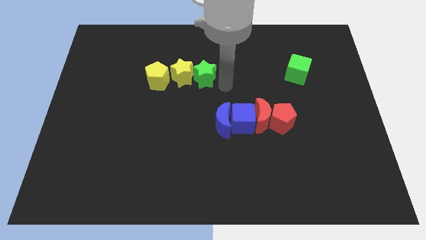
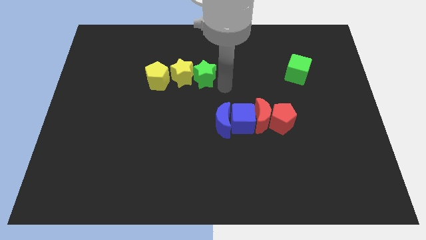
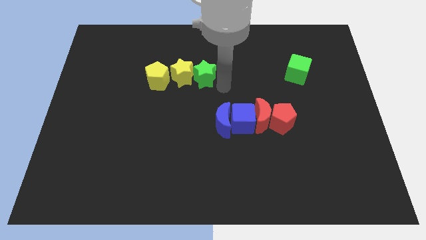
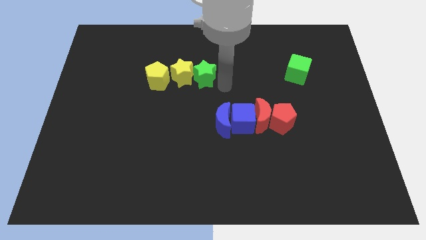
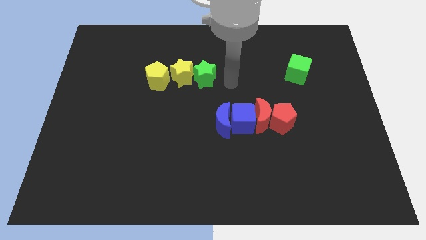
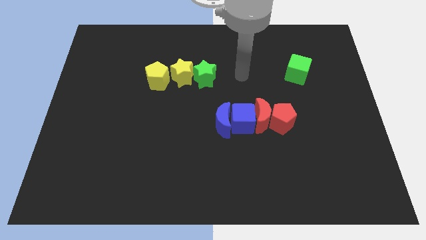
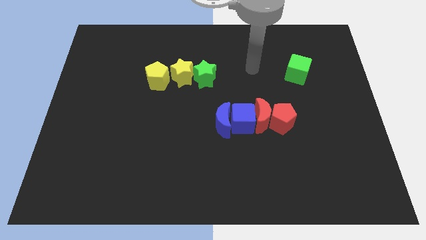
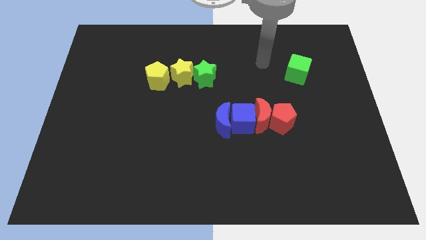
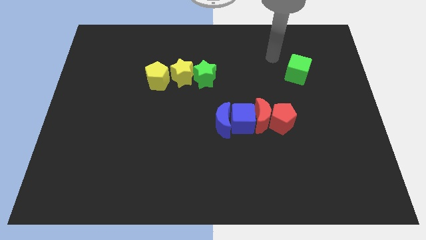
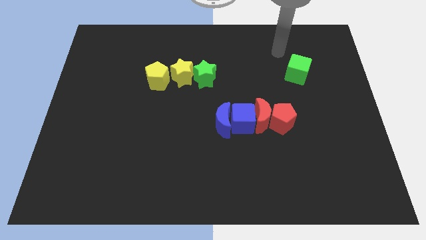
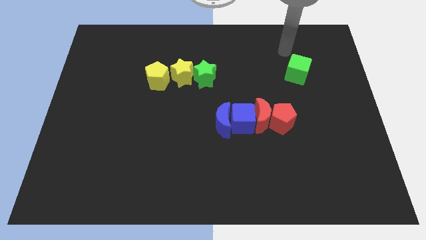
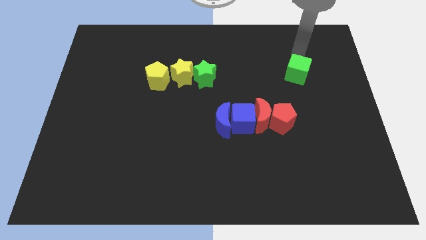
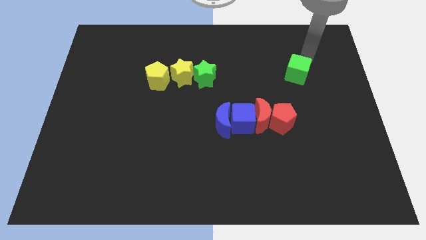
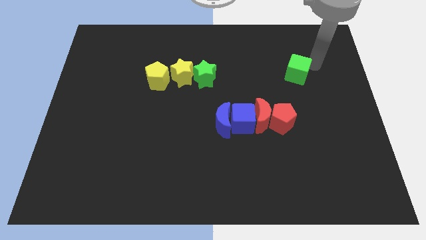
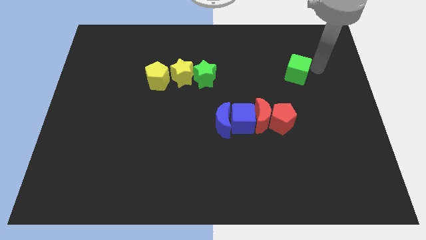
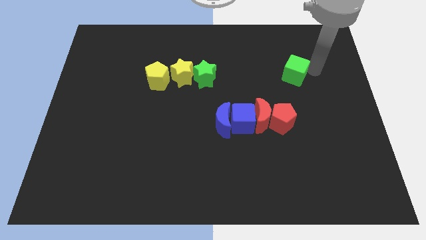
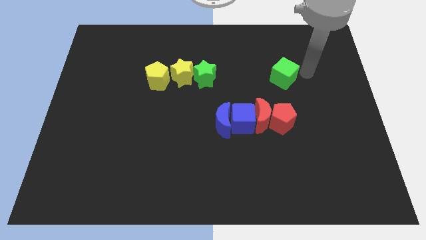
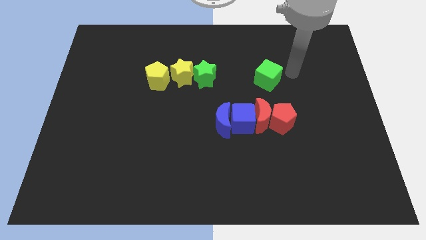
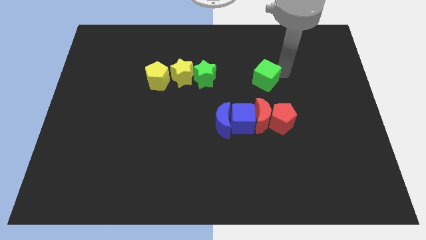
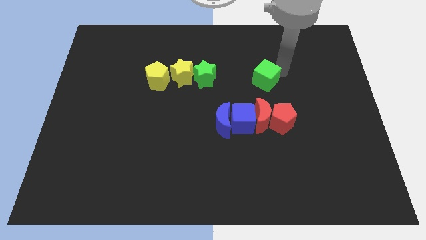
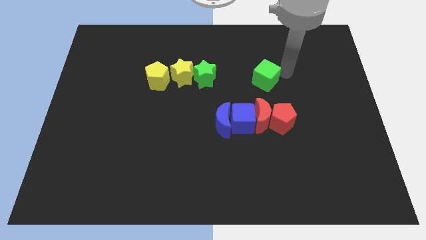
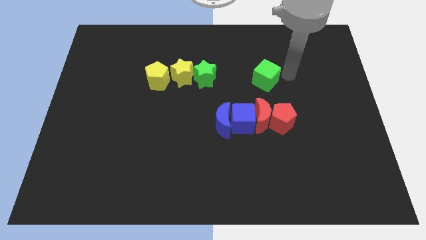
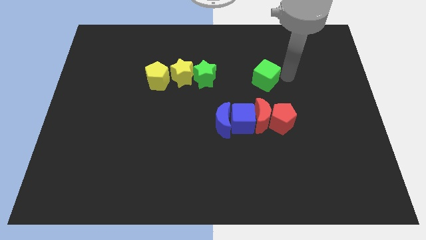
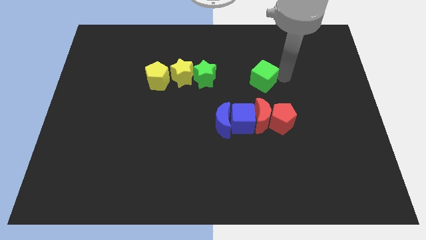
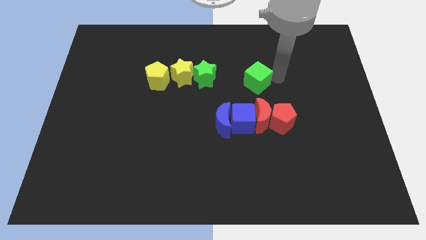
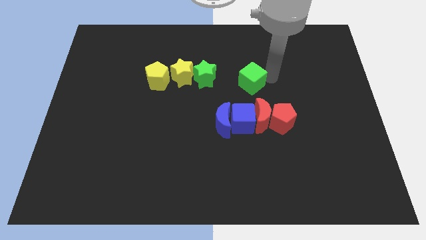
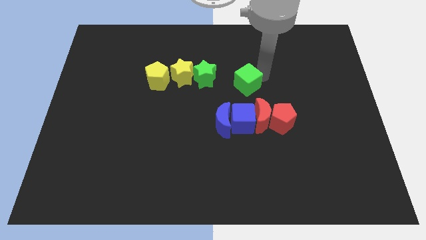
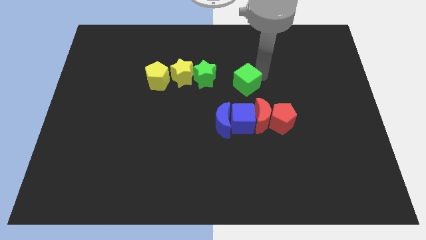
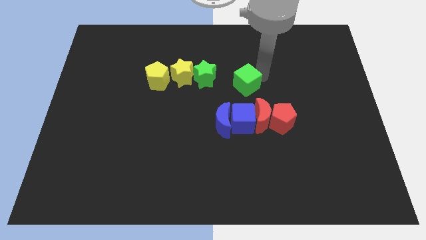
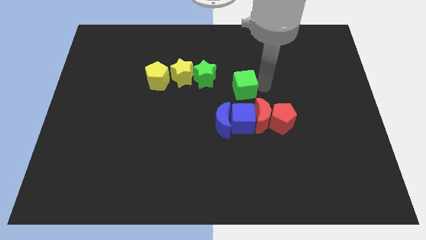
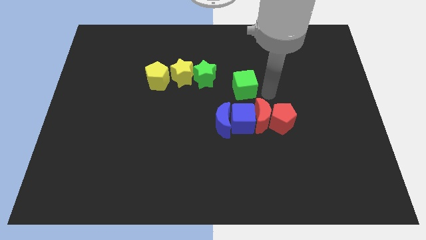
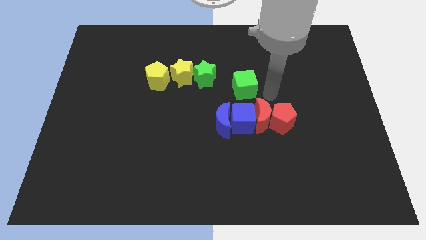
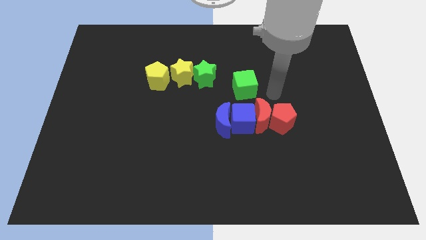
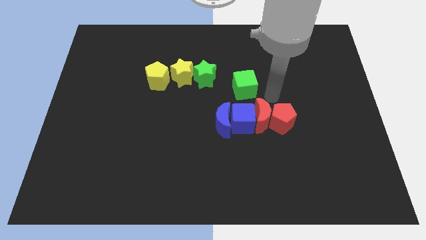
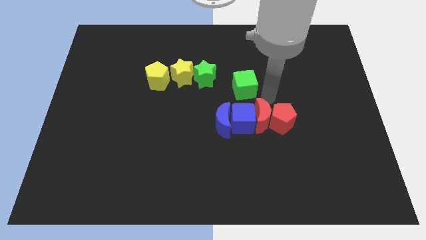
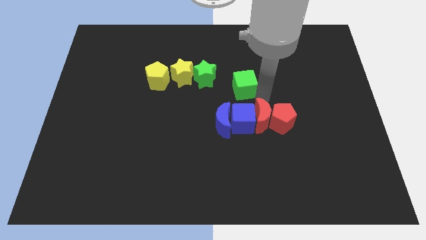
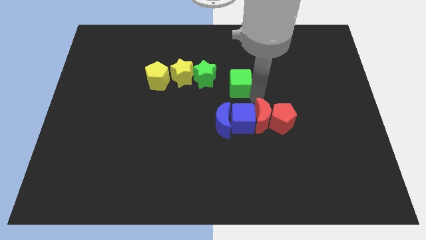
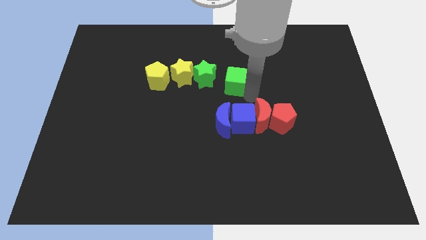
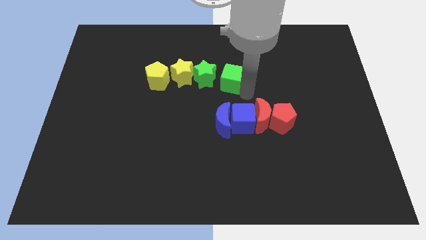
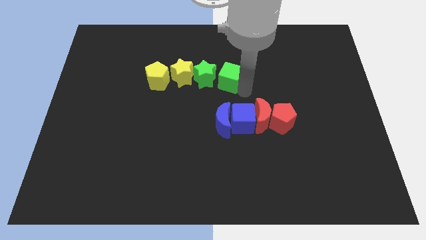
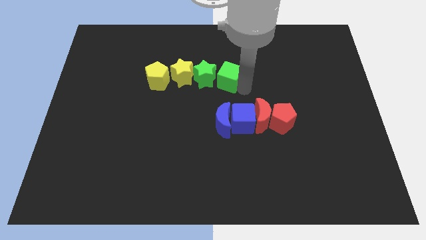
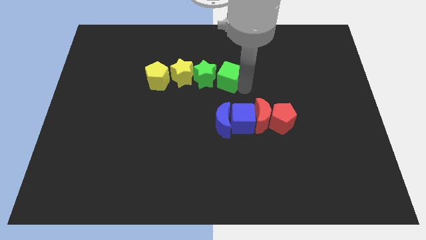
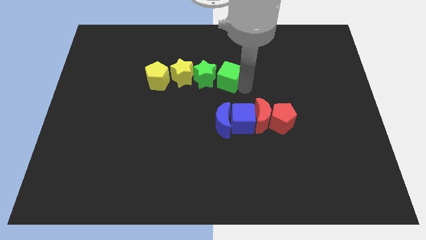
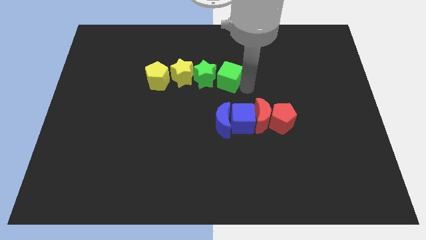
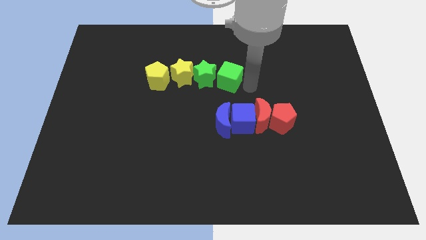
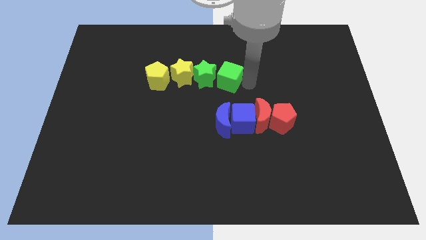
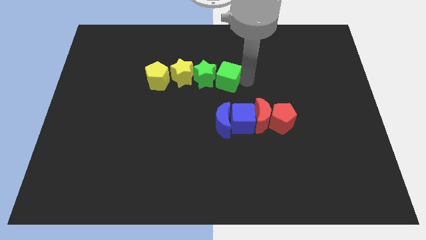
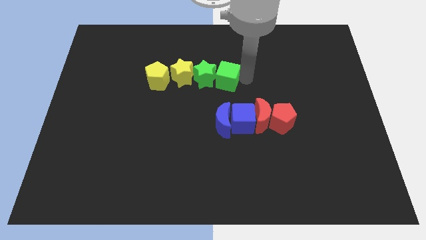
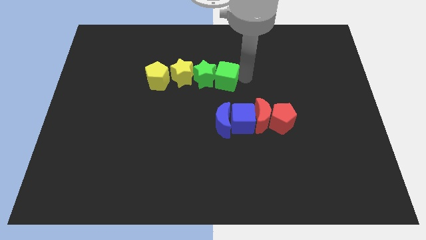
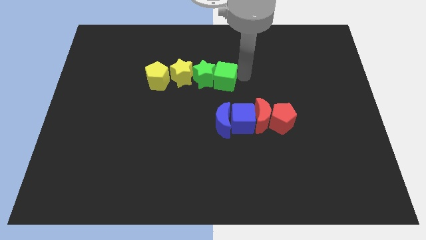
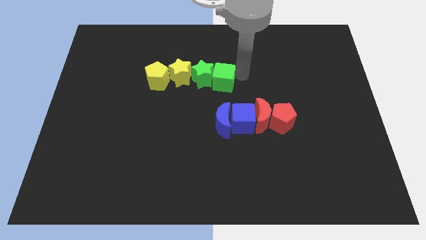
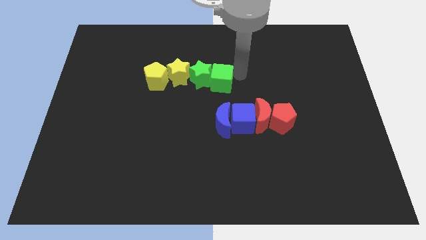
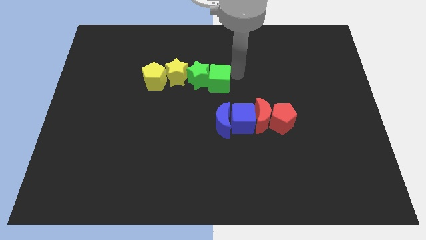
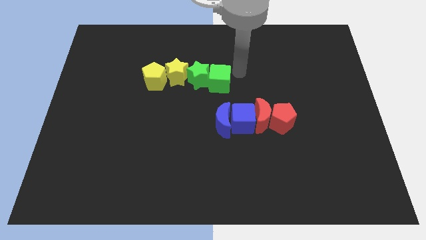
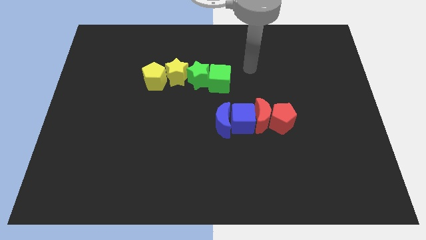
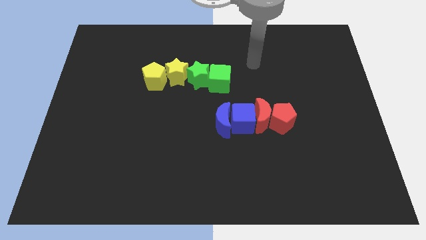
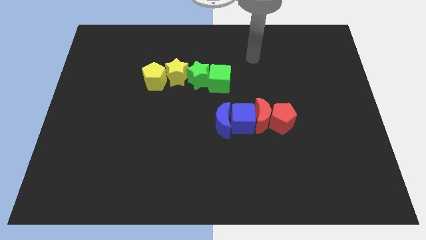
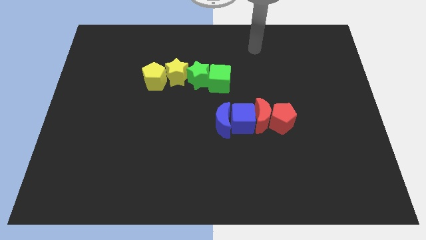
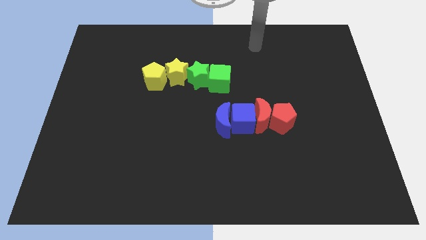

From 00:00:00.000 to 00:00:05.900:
push the green cube into the green star

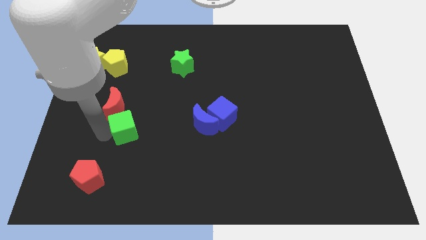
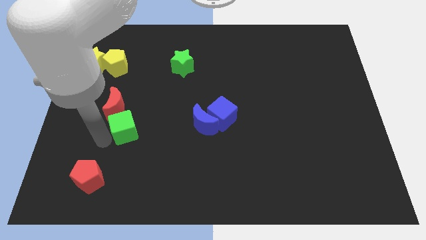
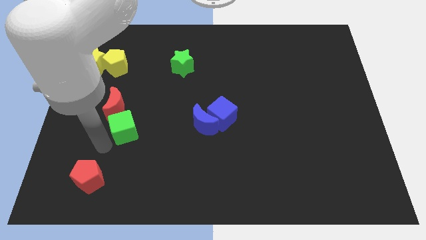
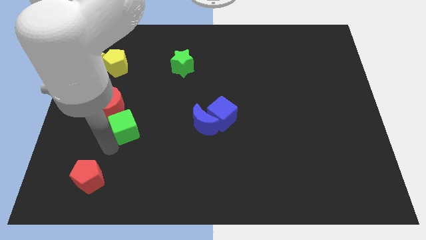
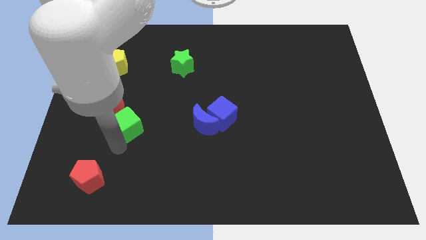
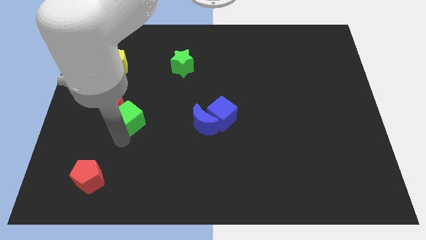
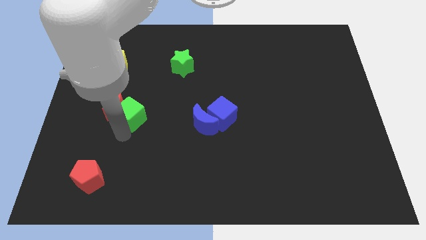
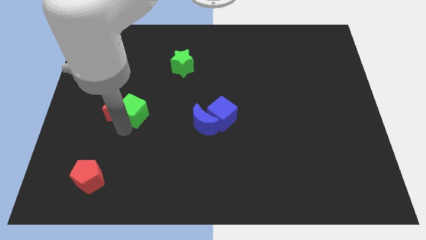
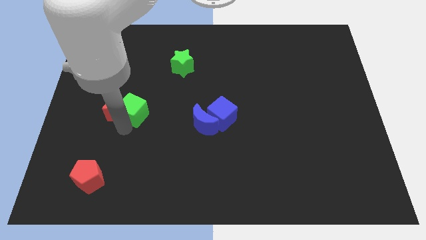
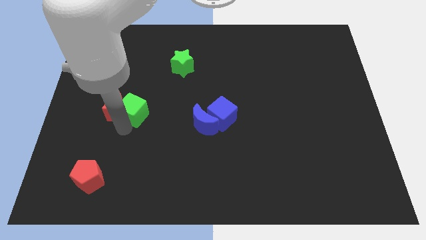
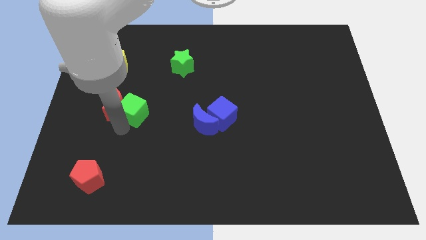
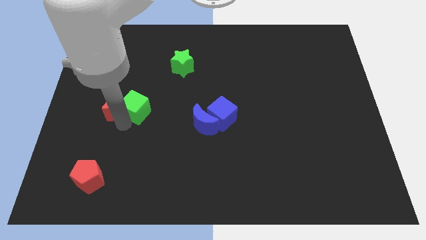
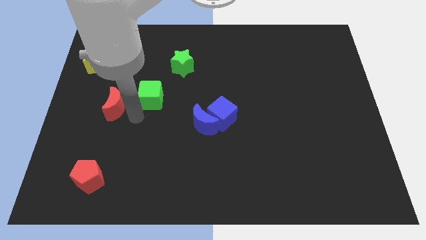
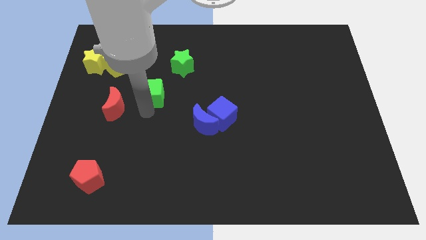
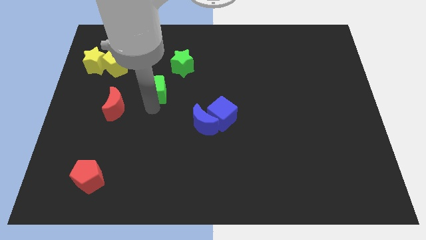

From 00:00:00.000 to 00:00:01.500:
move the green cube to the top left of the blue crescent

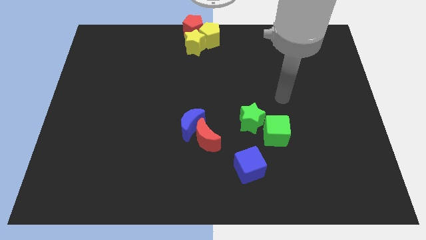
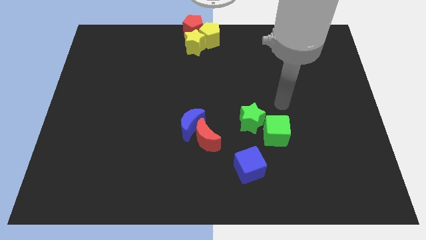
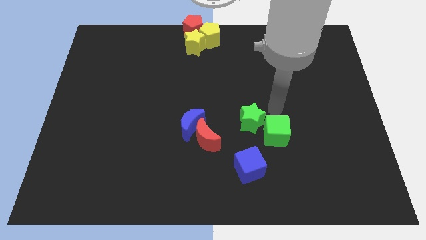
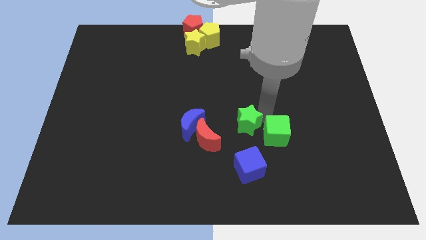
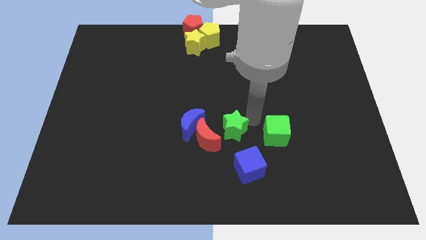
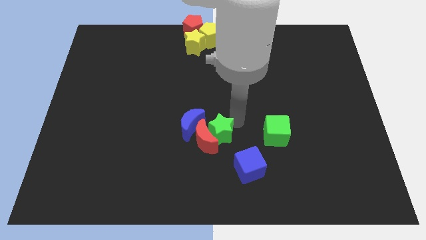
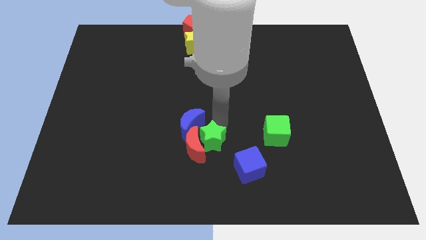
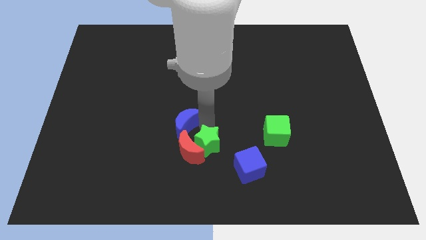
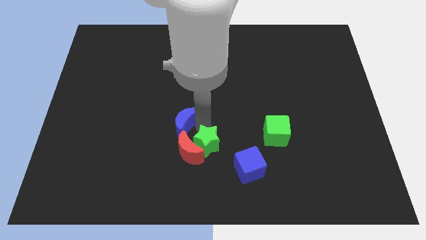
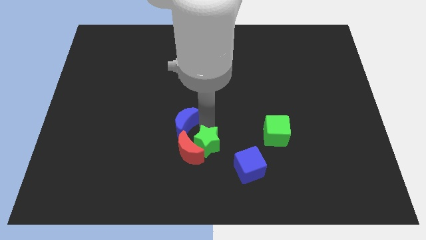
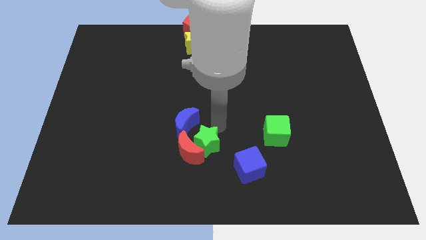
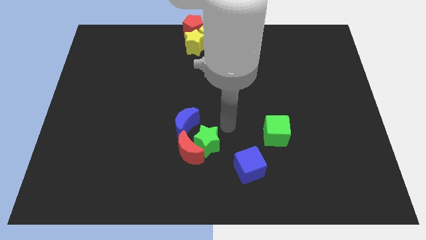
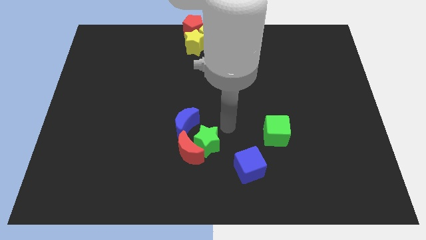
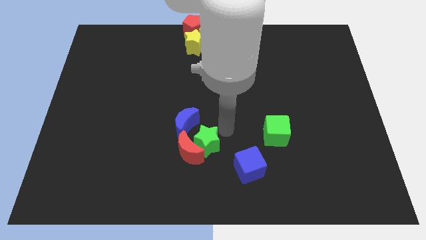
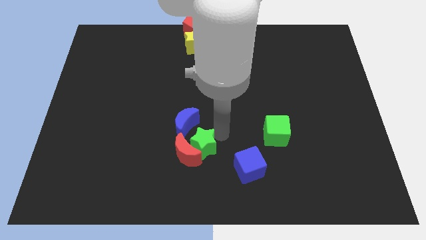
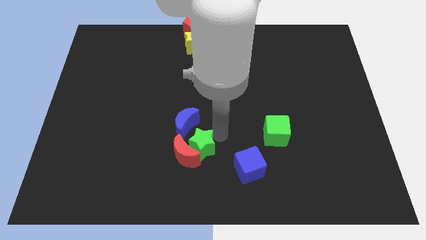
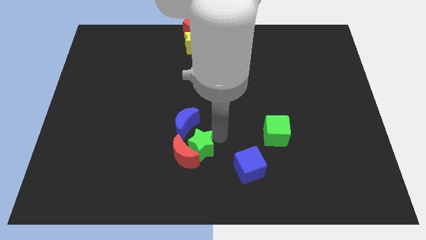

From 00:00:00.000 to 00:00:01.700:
push green star into the red moon
